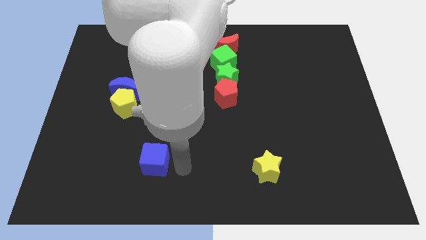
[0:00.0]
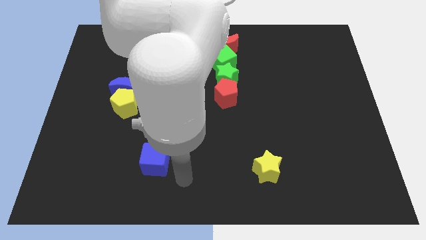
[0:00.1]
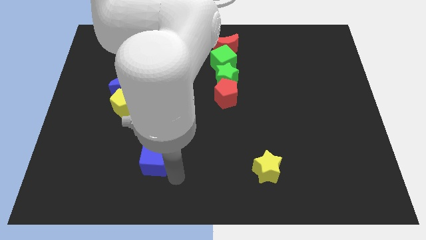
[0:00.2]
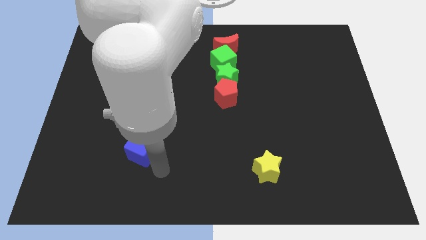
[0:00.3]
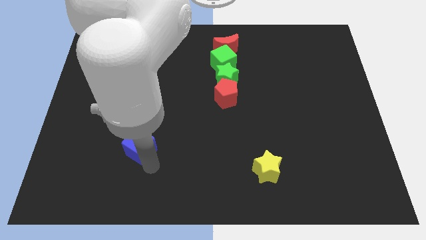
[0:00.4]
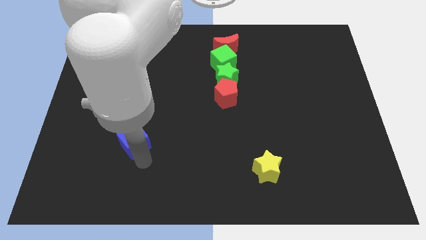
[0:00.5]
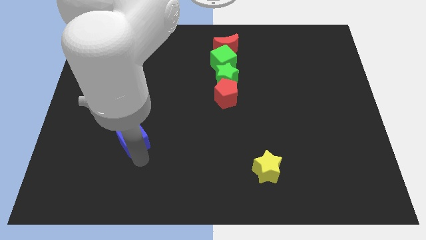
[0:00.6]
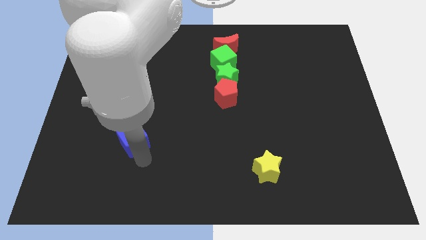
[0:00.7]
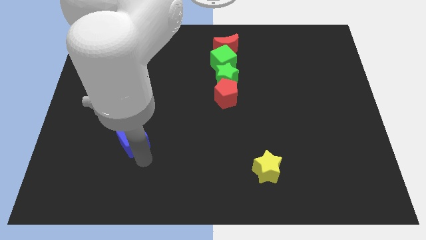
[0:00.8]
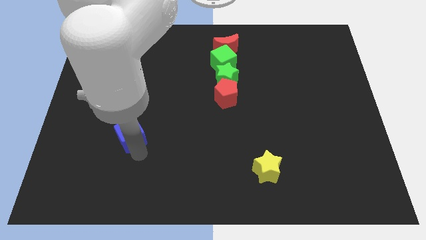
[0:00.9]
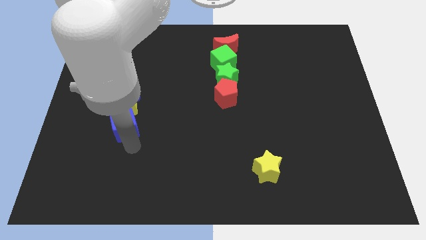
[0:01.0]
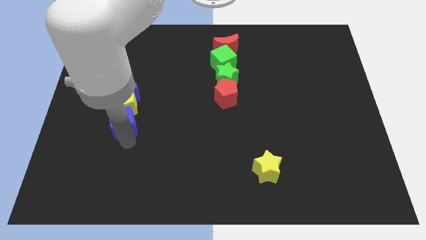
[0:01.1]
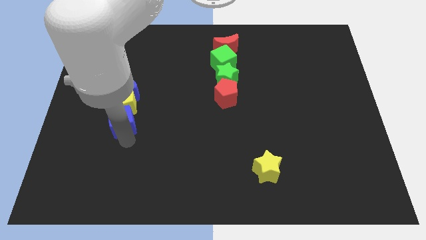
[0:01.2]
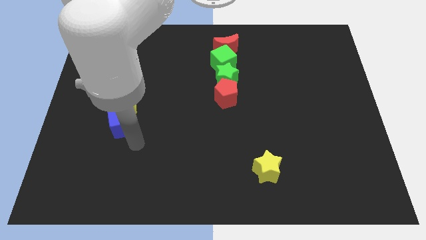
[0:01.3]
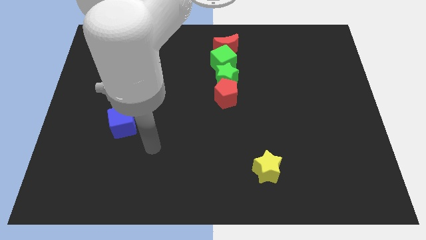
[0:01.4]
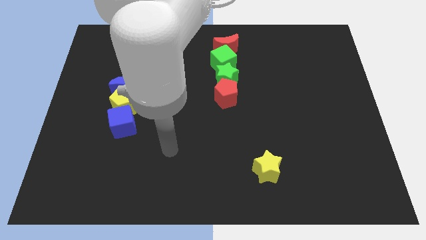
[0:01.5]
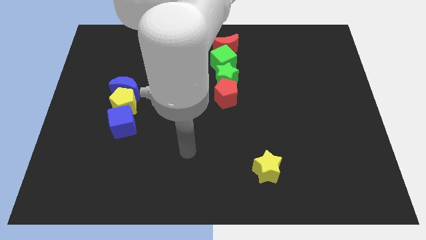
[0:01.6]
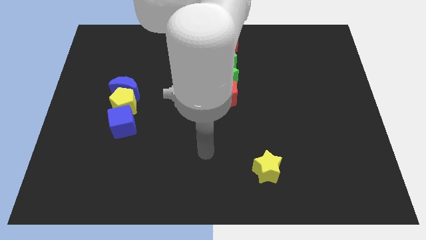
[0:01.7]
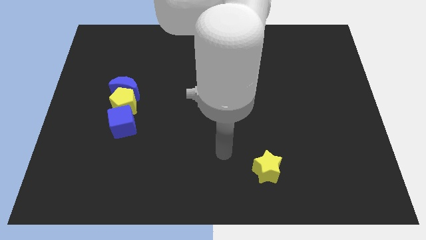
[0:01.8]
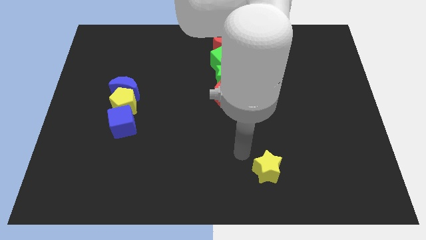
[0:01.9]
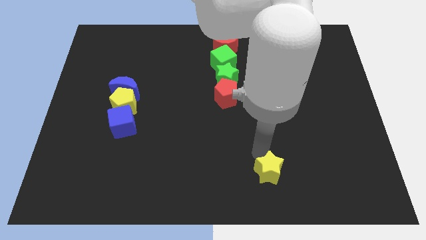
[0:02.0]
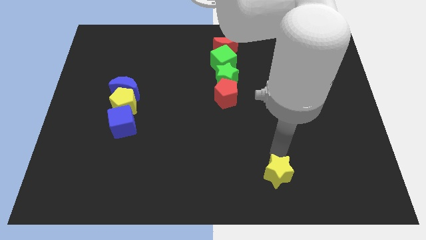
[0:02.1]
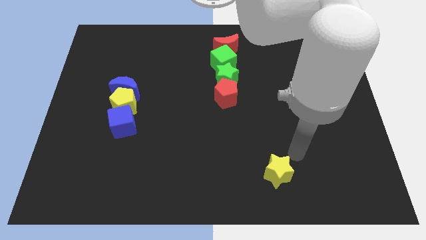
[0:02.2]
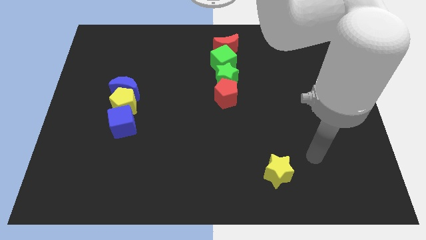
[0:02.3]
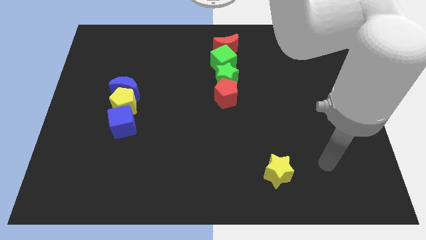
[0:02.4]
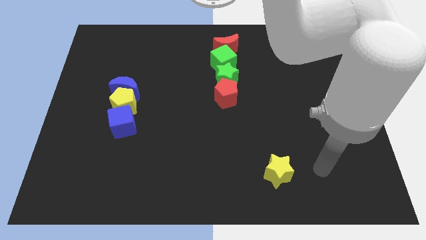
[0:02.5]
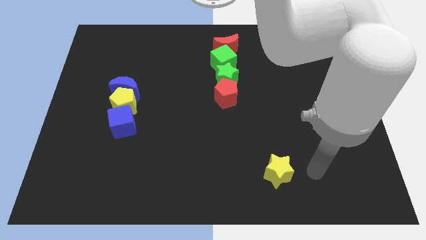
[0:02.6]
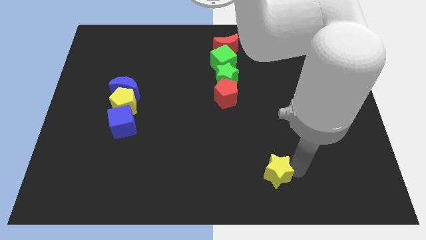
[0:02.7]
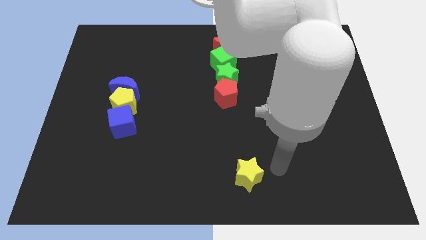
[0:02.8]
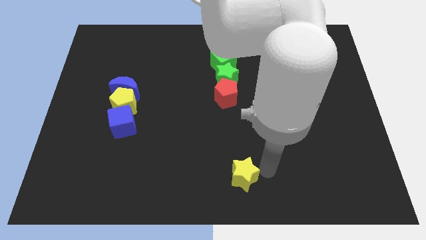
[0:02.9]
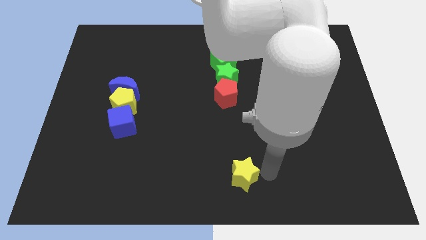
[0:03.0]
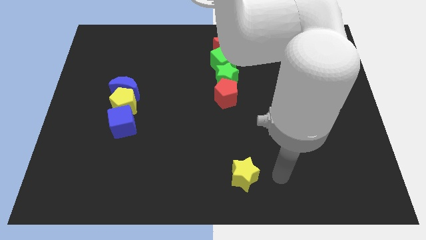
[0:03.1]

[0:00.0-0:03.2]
place the yellow star to the bottom of the red pentagon

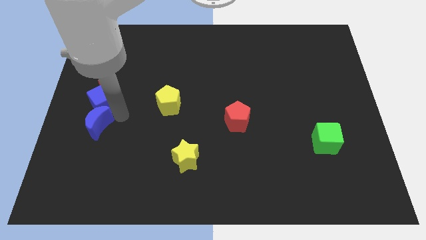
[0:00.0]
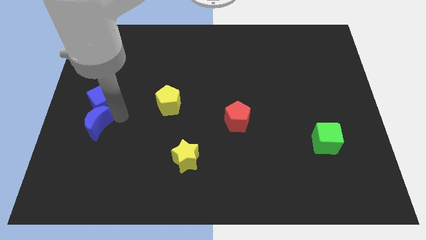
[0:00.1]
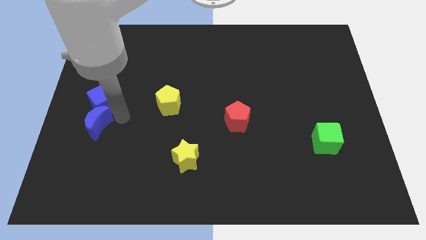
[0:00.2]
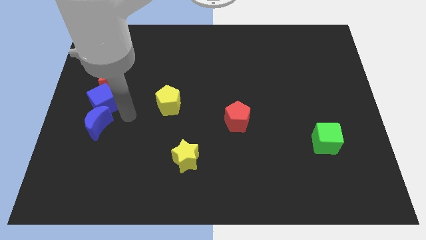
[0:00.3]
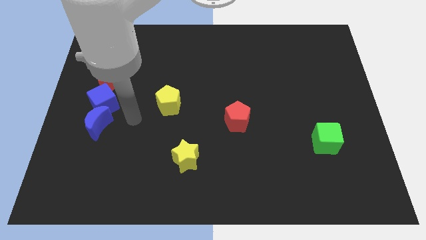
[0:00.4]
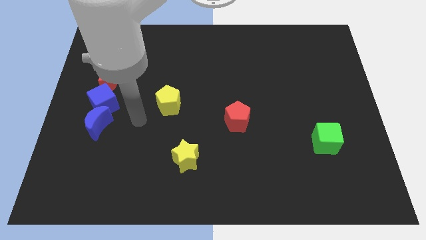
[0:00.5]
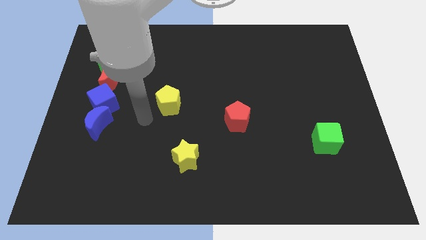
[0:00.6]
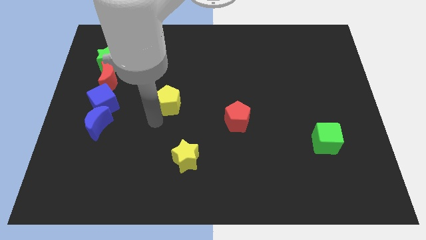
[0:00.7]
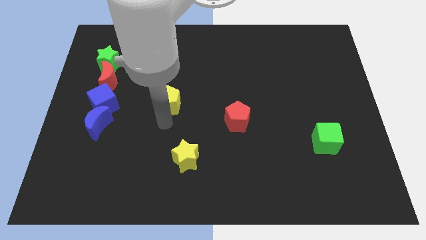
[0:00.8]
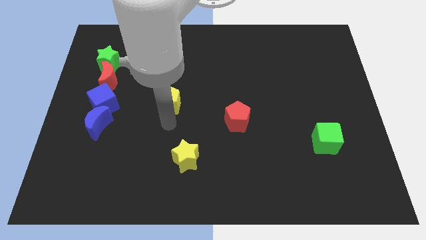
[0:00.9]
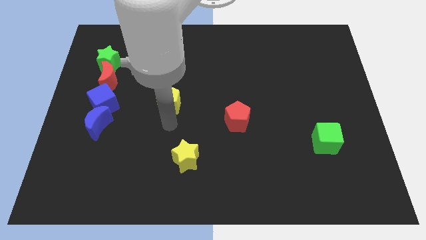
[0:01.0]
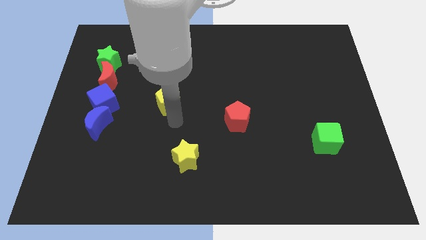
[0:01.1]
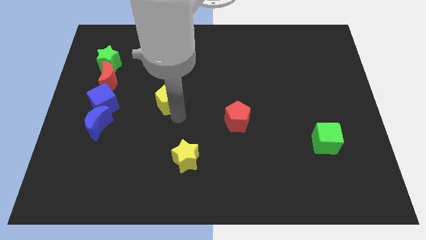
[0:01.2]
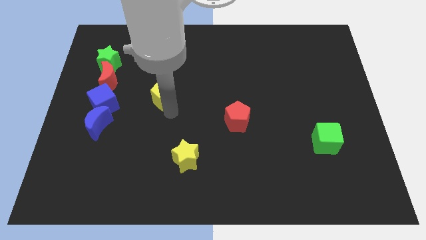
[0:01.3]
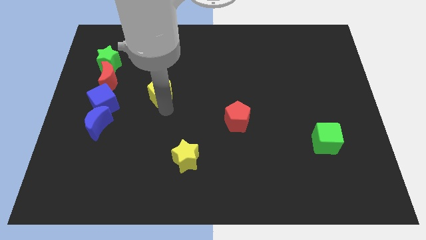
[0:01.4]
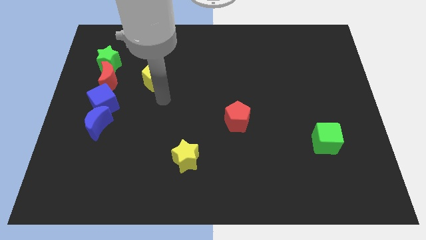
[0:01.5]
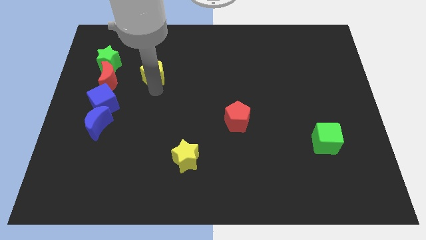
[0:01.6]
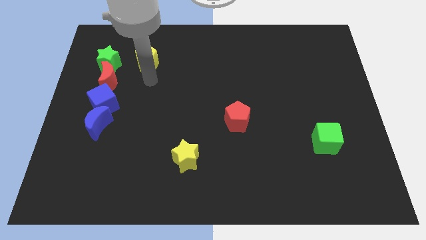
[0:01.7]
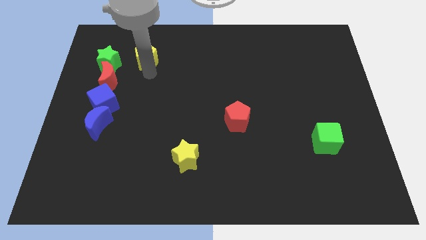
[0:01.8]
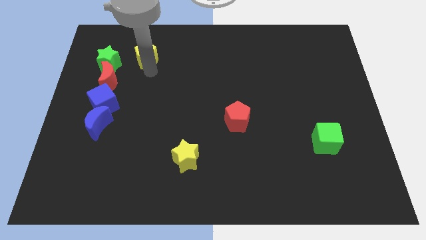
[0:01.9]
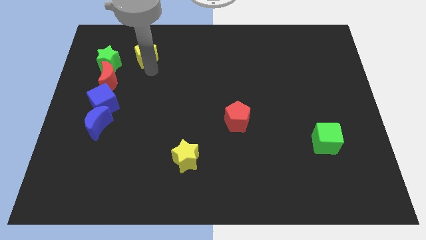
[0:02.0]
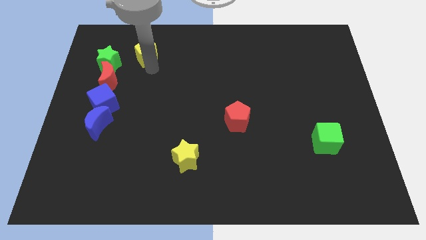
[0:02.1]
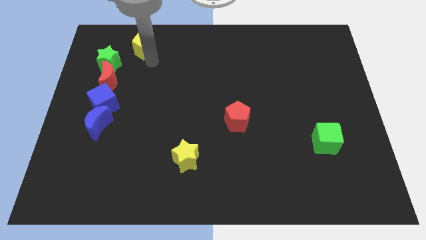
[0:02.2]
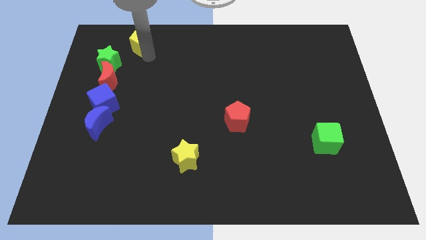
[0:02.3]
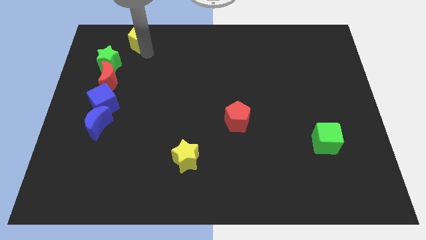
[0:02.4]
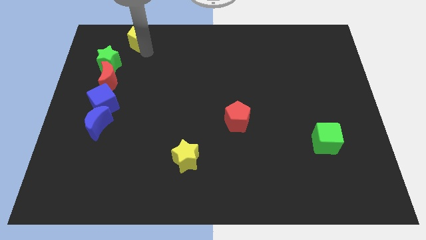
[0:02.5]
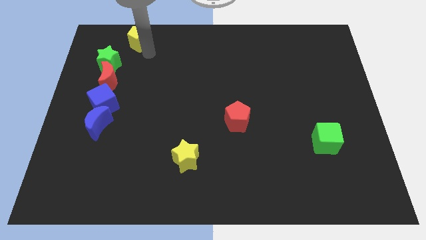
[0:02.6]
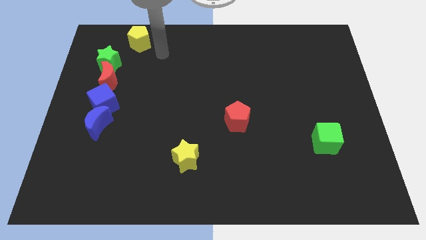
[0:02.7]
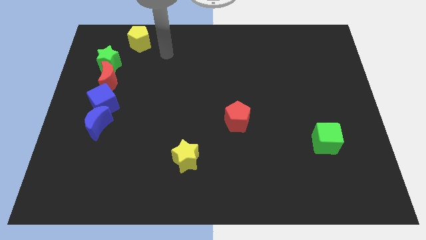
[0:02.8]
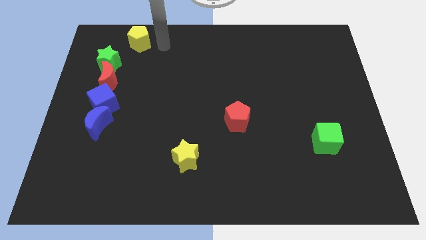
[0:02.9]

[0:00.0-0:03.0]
take the yellow pentagon to the top left of the board

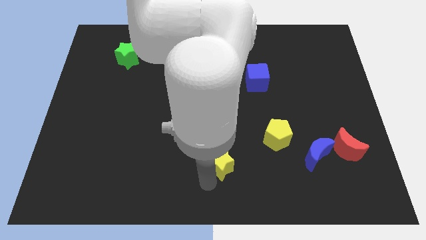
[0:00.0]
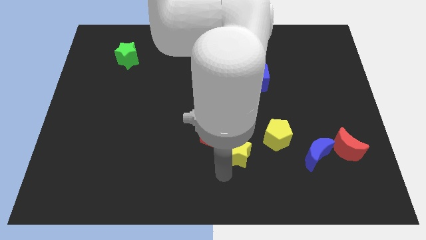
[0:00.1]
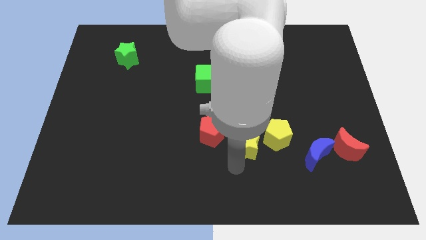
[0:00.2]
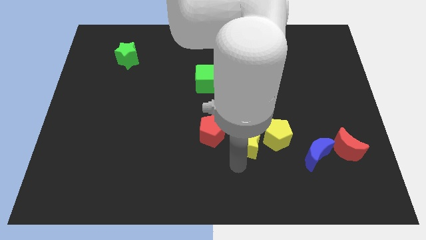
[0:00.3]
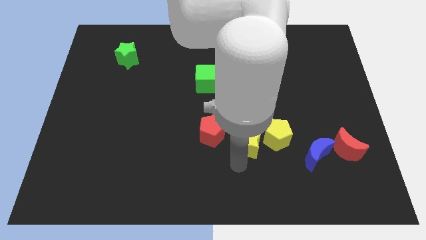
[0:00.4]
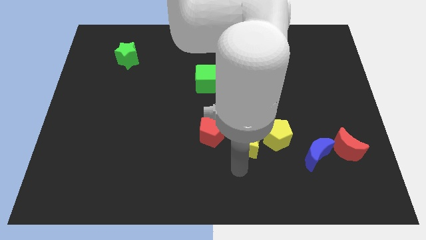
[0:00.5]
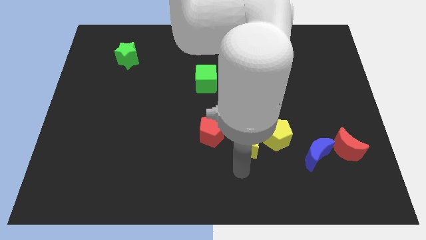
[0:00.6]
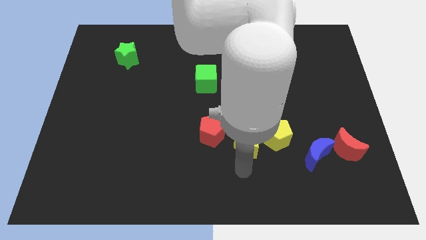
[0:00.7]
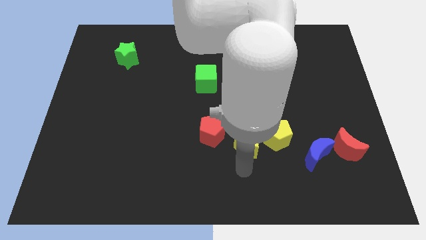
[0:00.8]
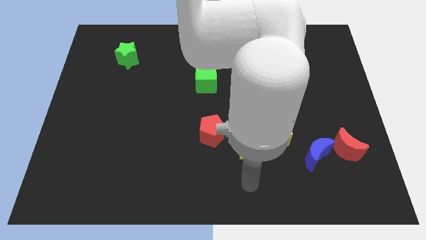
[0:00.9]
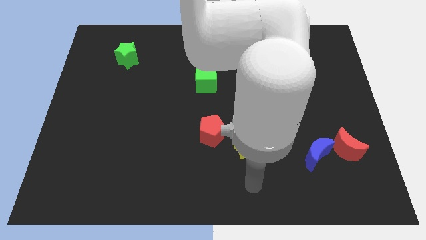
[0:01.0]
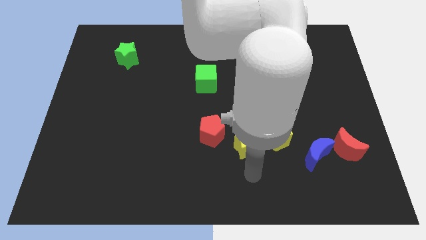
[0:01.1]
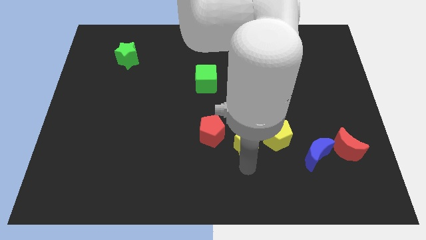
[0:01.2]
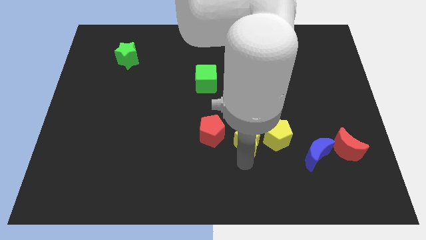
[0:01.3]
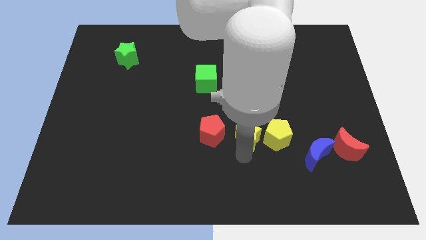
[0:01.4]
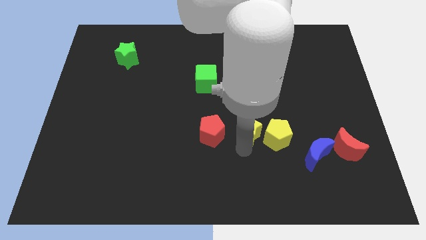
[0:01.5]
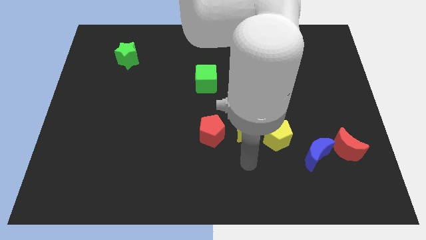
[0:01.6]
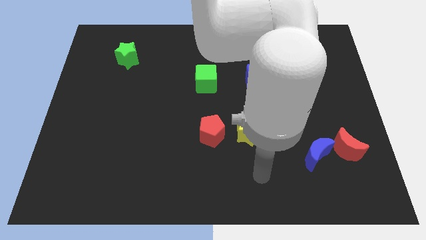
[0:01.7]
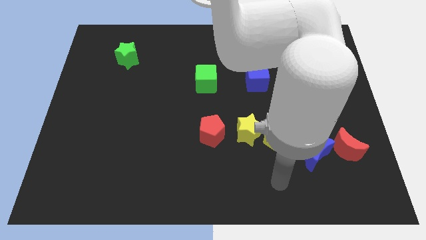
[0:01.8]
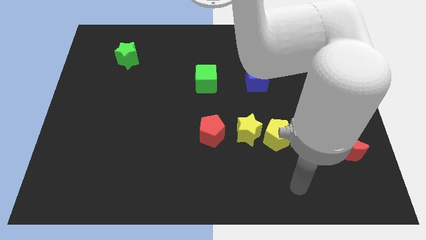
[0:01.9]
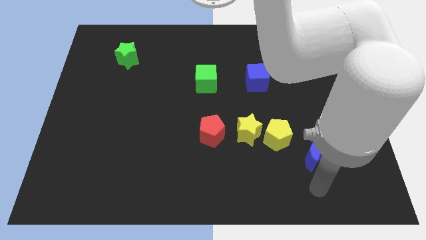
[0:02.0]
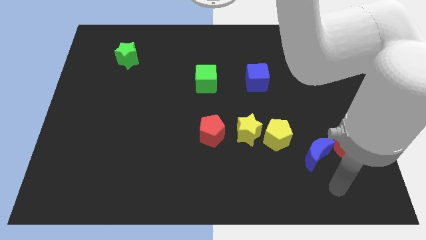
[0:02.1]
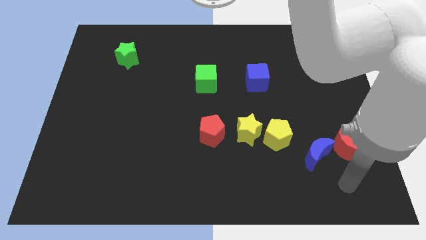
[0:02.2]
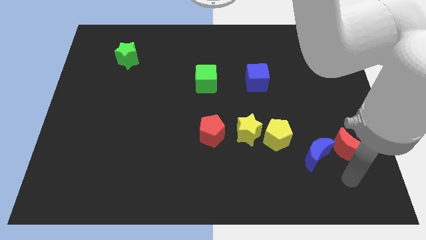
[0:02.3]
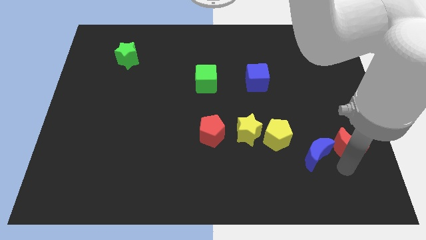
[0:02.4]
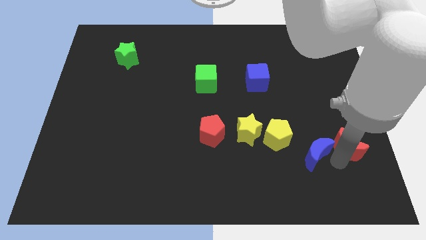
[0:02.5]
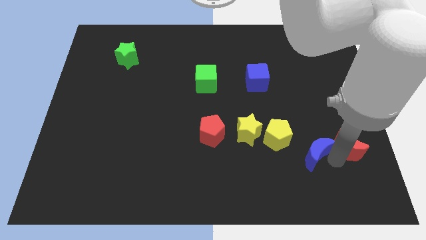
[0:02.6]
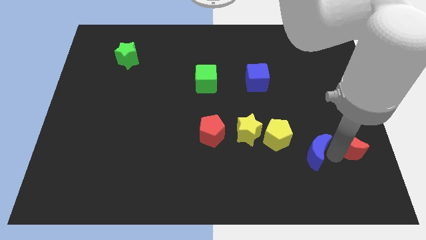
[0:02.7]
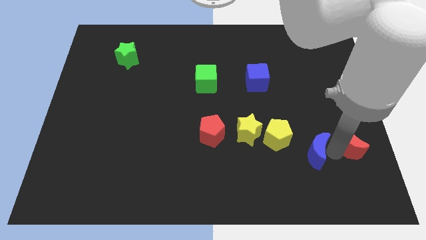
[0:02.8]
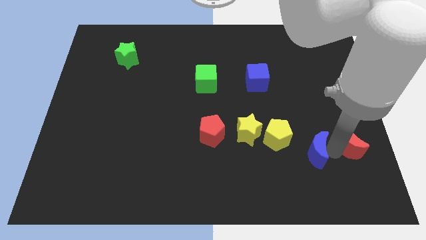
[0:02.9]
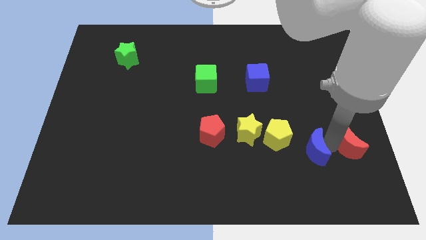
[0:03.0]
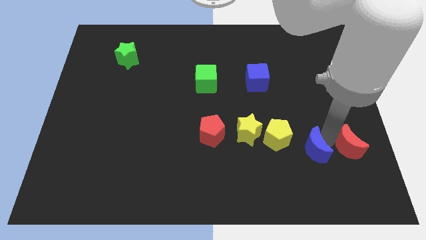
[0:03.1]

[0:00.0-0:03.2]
move your arm towards the blue crescent
